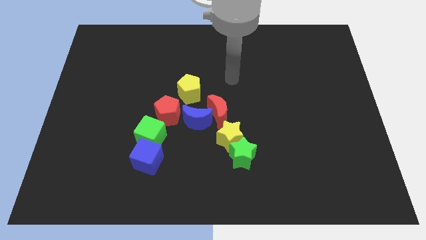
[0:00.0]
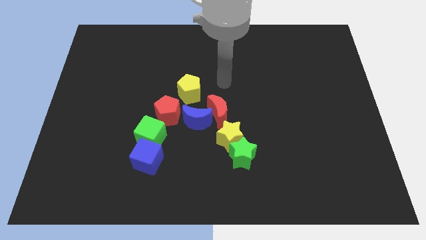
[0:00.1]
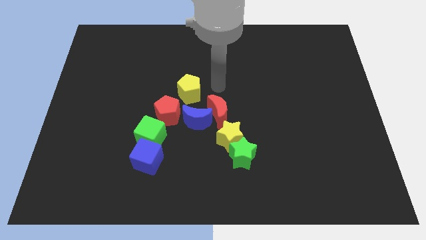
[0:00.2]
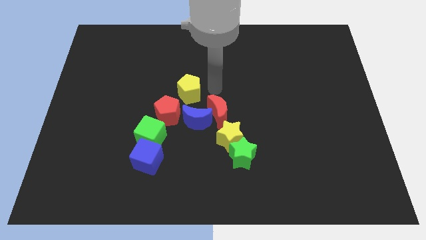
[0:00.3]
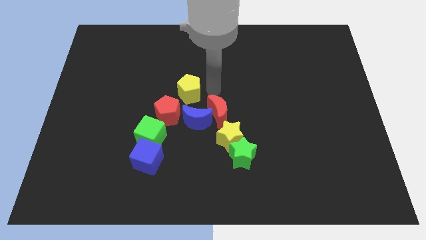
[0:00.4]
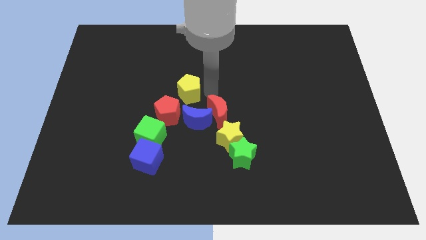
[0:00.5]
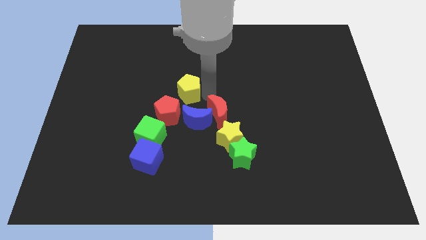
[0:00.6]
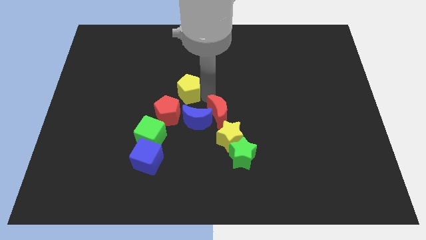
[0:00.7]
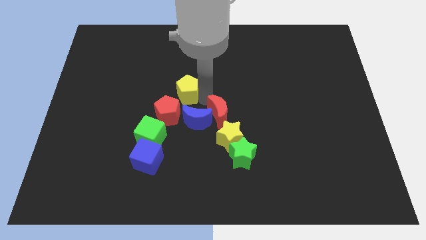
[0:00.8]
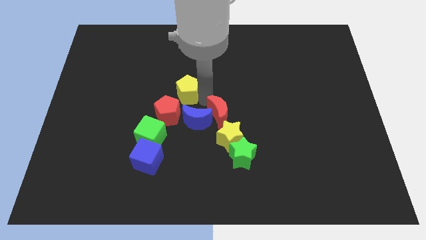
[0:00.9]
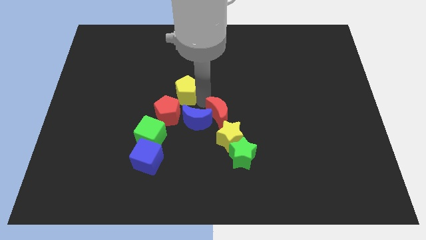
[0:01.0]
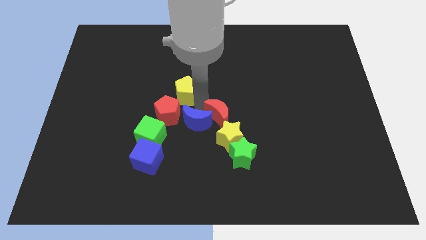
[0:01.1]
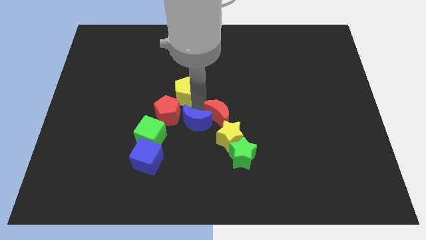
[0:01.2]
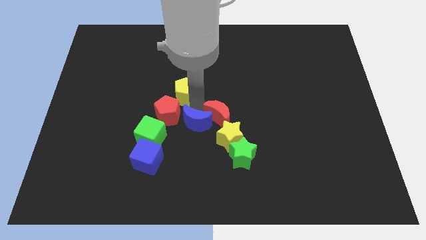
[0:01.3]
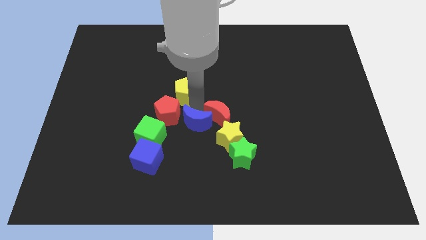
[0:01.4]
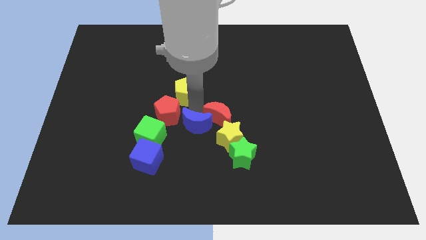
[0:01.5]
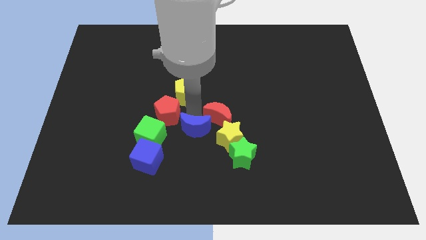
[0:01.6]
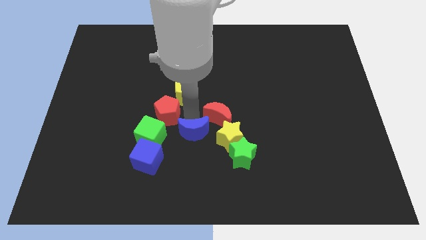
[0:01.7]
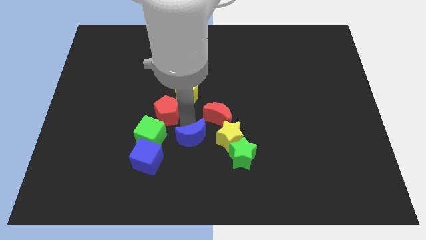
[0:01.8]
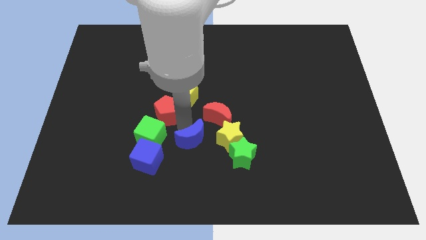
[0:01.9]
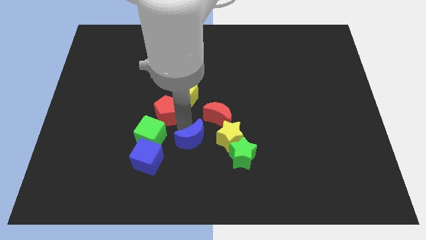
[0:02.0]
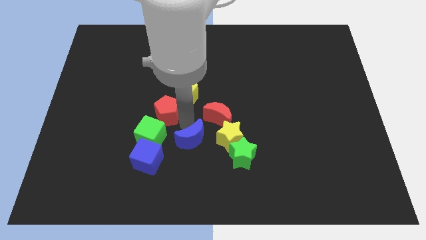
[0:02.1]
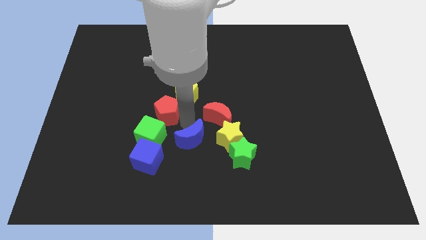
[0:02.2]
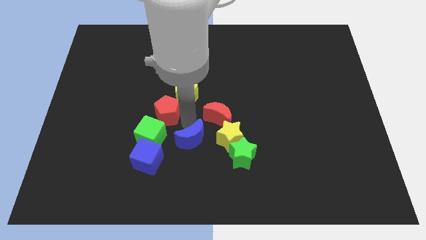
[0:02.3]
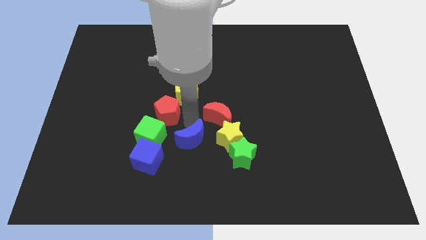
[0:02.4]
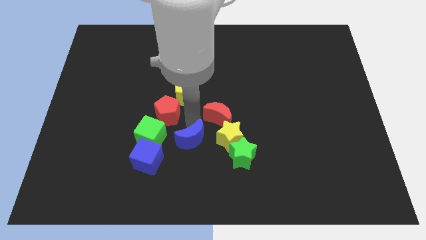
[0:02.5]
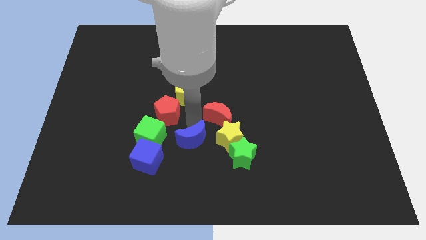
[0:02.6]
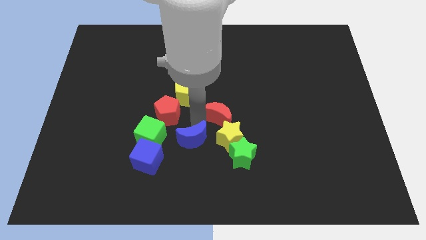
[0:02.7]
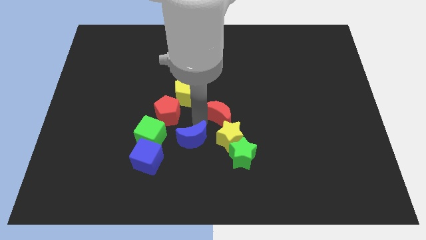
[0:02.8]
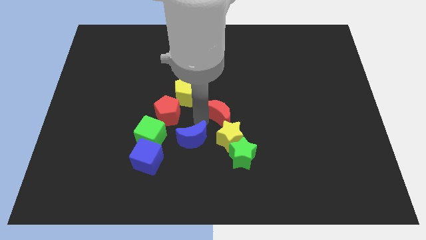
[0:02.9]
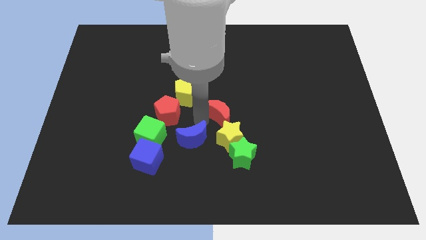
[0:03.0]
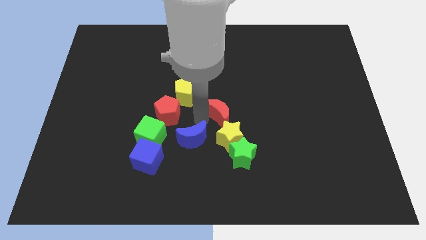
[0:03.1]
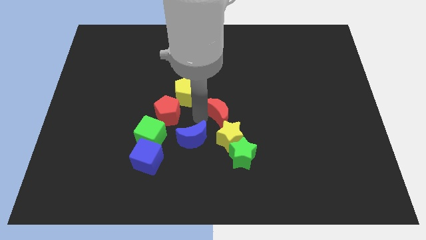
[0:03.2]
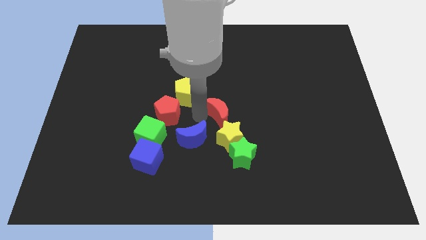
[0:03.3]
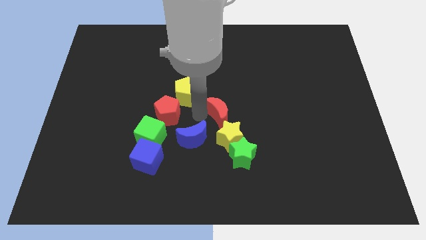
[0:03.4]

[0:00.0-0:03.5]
separate blue crescent from red crescent

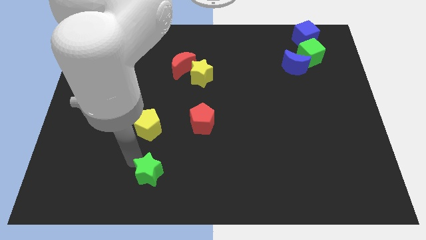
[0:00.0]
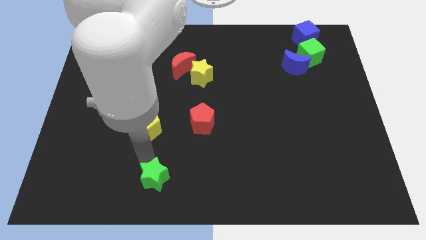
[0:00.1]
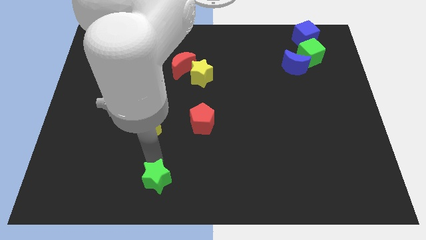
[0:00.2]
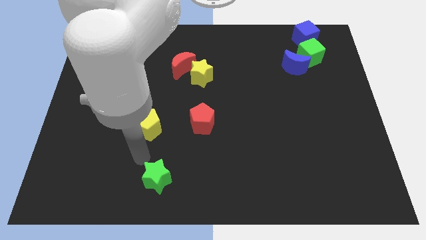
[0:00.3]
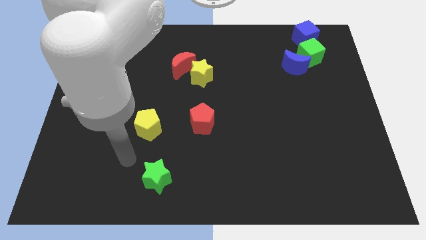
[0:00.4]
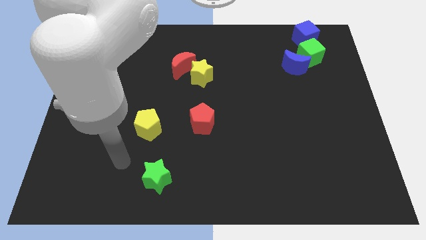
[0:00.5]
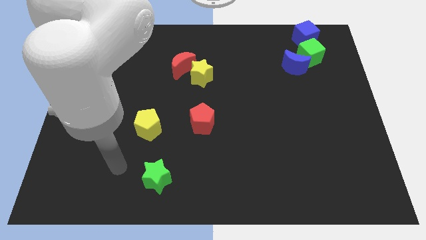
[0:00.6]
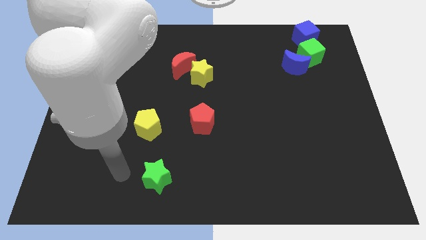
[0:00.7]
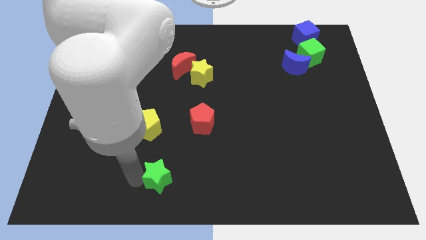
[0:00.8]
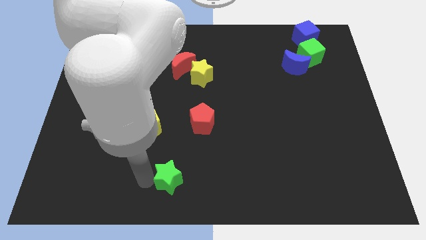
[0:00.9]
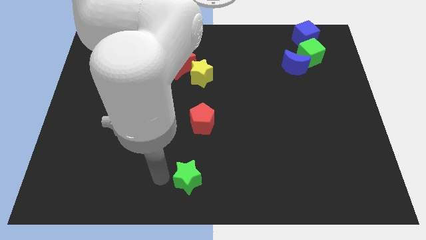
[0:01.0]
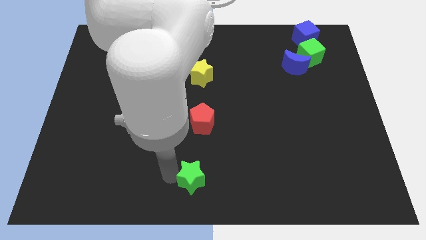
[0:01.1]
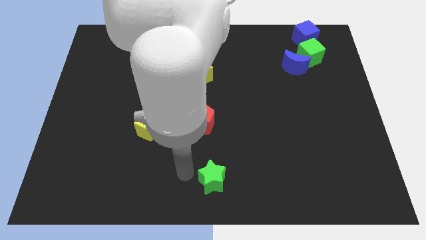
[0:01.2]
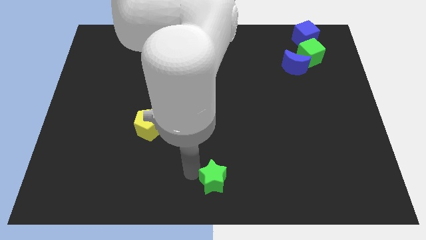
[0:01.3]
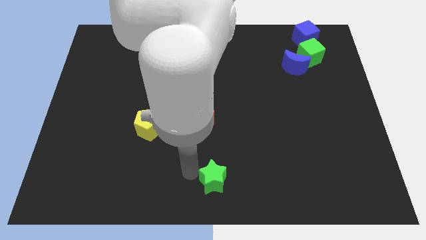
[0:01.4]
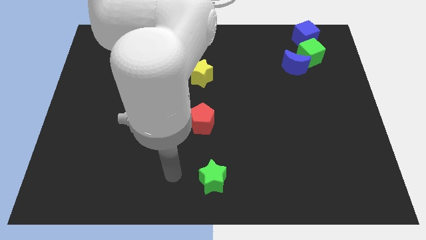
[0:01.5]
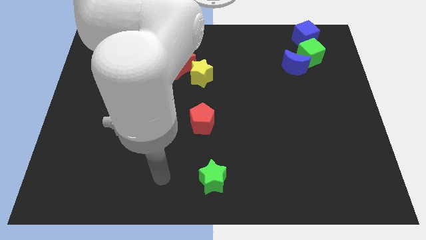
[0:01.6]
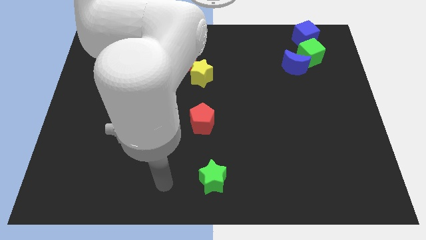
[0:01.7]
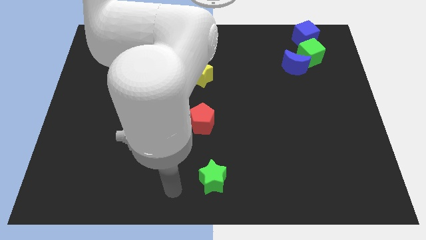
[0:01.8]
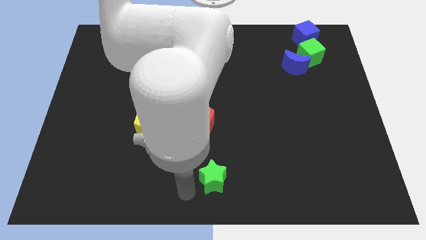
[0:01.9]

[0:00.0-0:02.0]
place the green star at the bottom center of the board

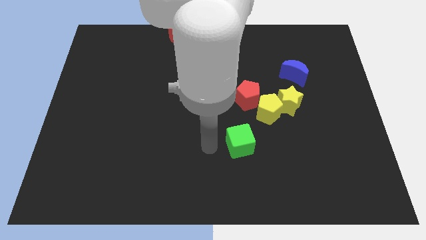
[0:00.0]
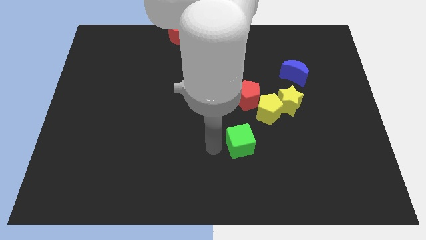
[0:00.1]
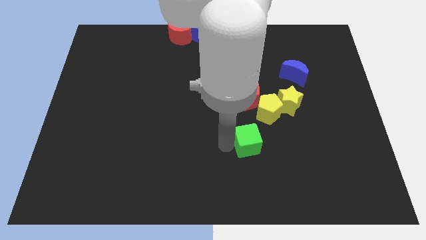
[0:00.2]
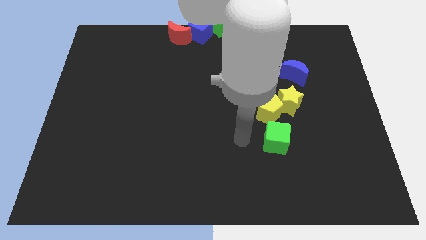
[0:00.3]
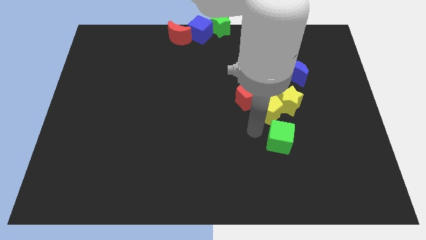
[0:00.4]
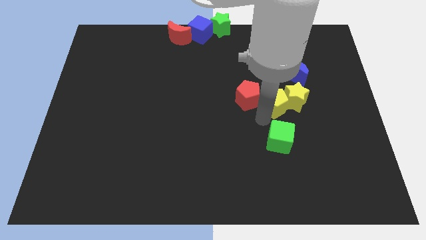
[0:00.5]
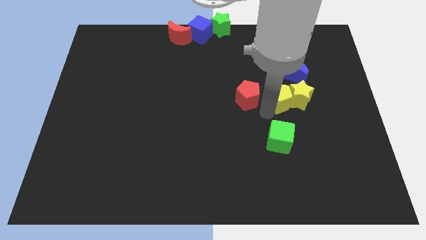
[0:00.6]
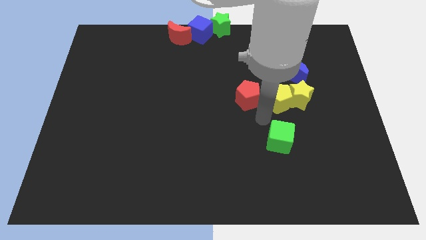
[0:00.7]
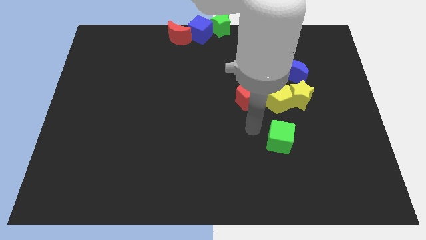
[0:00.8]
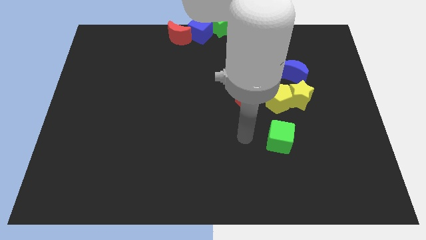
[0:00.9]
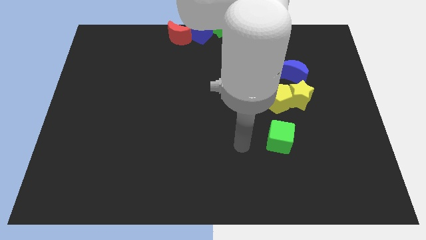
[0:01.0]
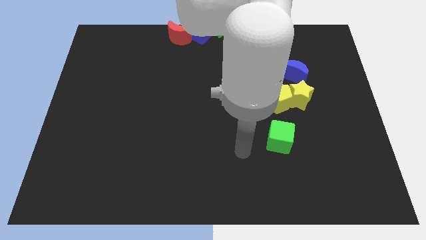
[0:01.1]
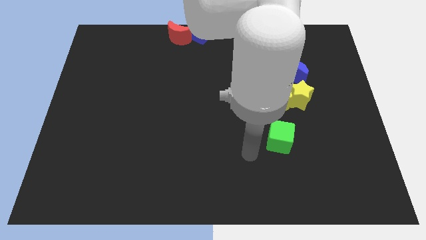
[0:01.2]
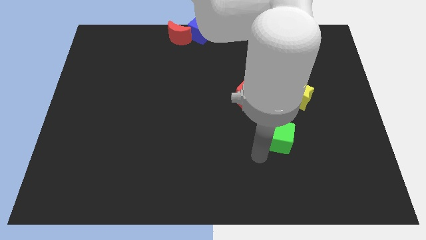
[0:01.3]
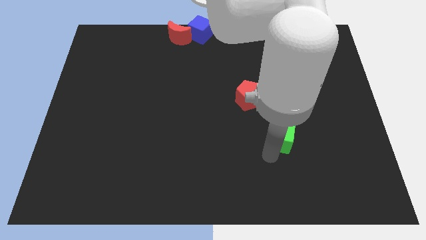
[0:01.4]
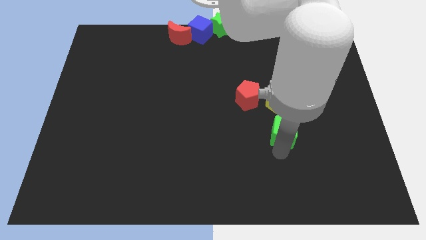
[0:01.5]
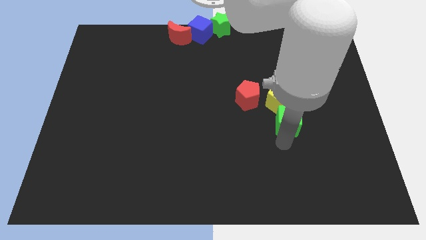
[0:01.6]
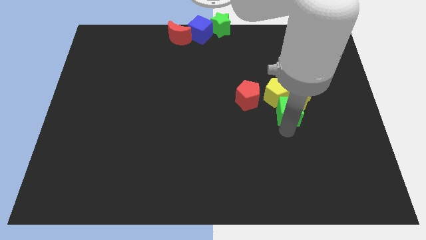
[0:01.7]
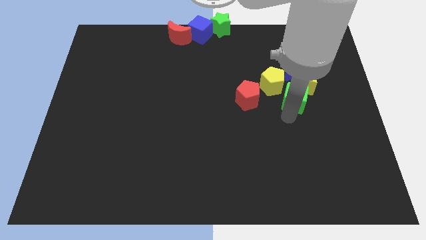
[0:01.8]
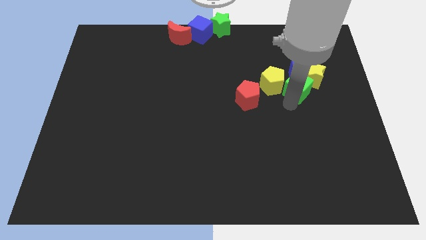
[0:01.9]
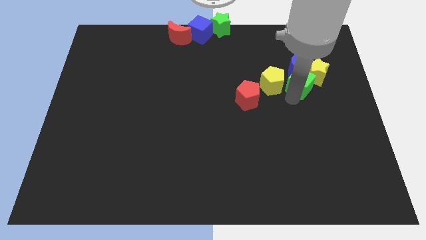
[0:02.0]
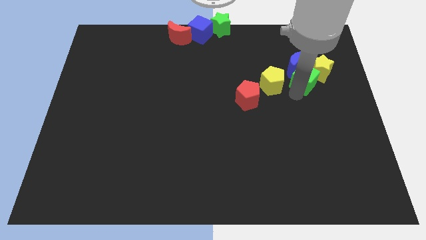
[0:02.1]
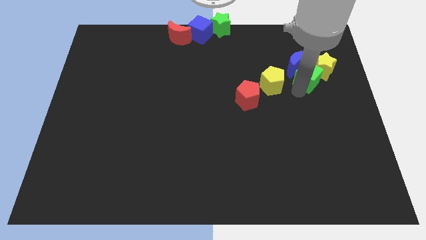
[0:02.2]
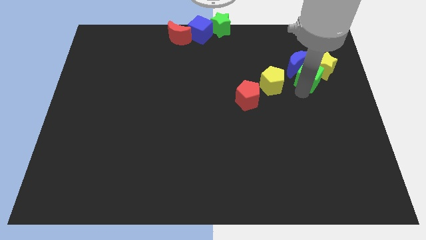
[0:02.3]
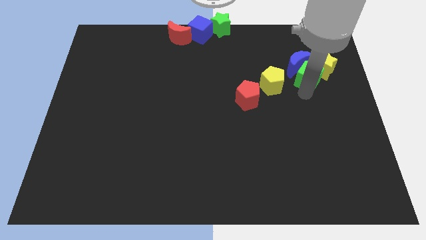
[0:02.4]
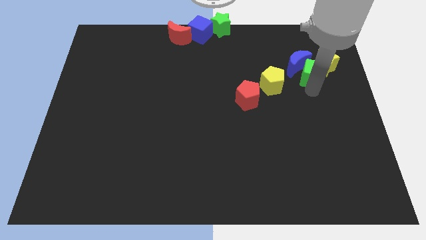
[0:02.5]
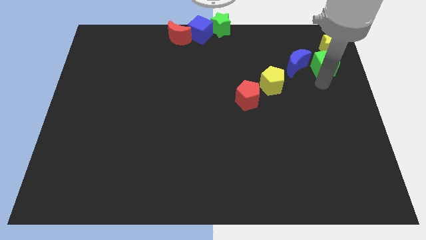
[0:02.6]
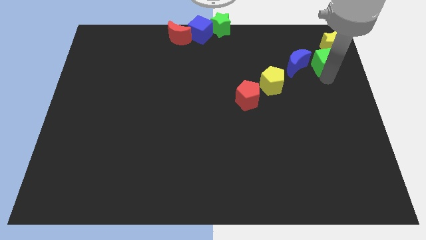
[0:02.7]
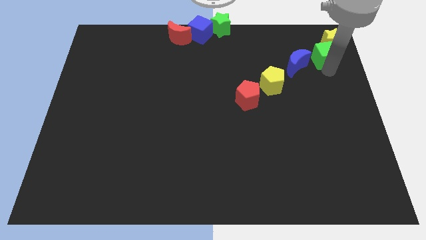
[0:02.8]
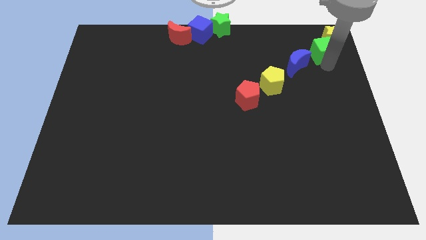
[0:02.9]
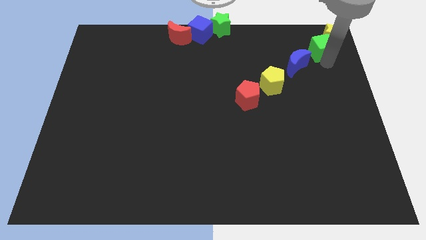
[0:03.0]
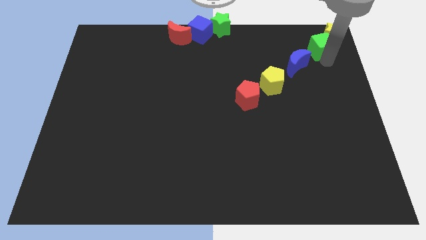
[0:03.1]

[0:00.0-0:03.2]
arrange objects in a line

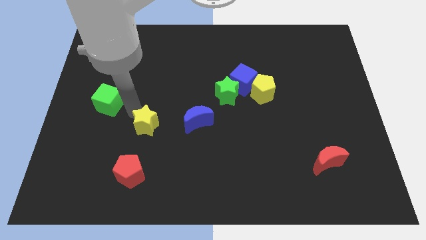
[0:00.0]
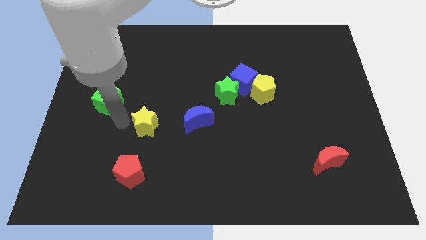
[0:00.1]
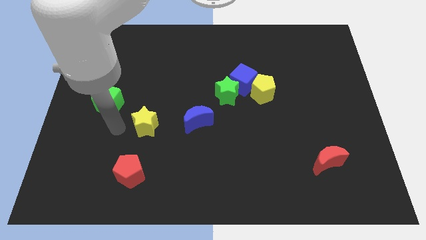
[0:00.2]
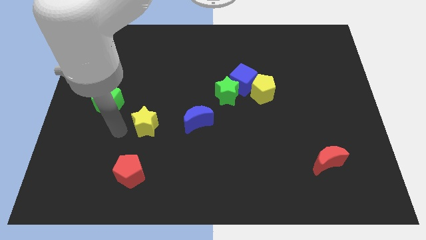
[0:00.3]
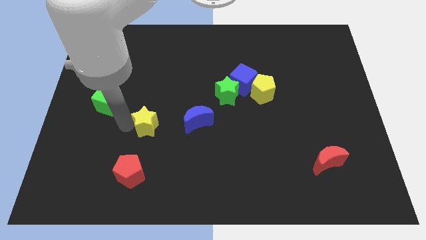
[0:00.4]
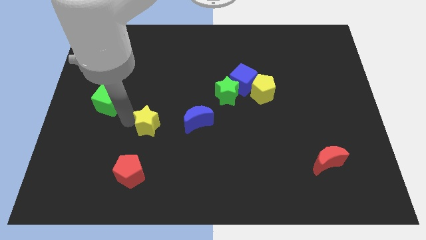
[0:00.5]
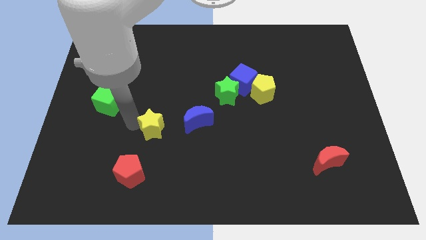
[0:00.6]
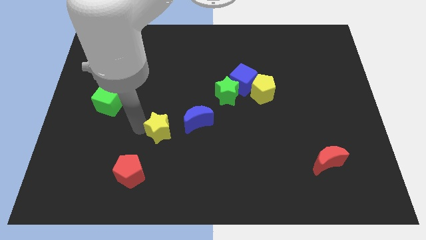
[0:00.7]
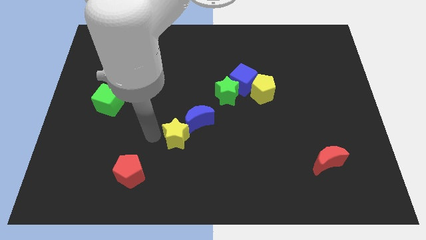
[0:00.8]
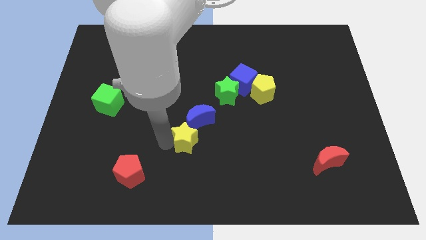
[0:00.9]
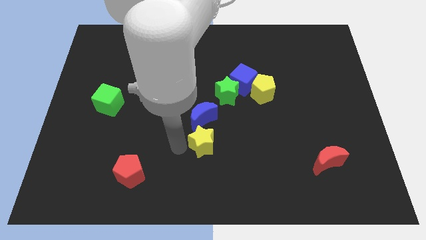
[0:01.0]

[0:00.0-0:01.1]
move the yellow star to the bottom of the blue moon
